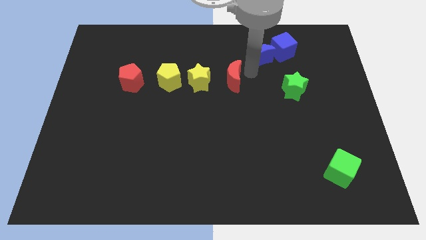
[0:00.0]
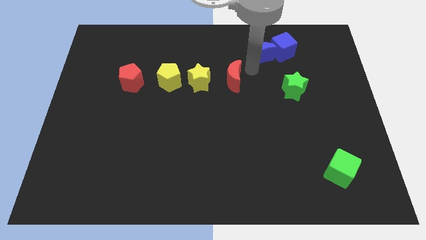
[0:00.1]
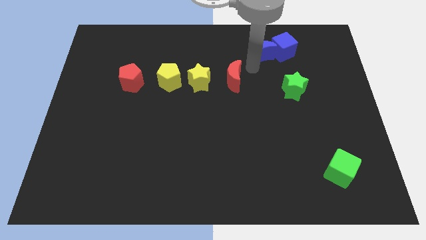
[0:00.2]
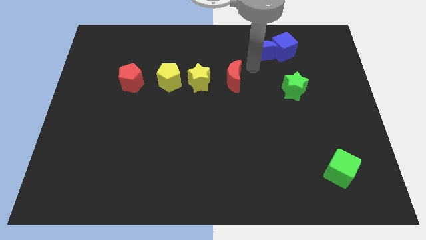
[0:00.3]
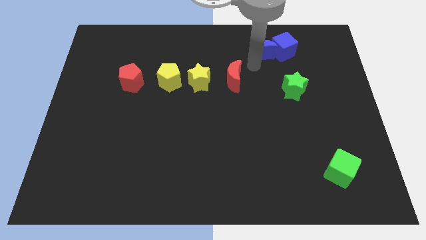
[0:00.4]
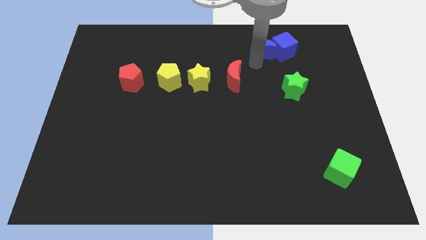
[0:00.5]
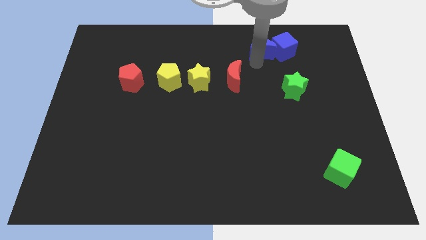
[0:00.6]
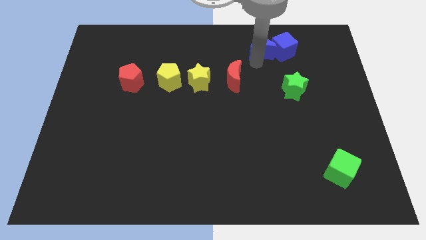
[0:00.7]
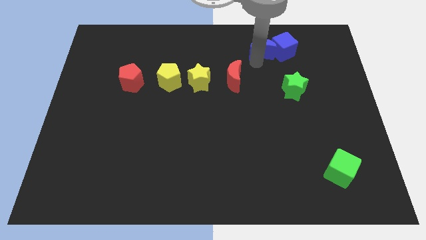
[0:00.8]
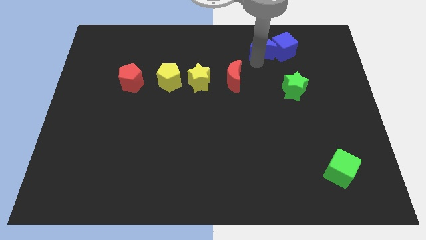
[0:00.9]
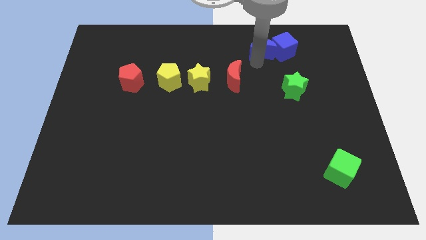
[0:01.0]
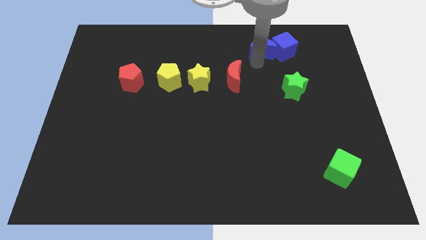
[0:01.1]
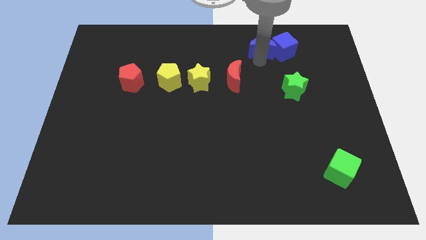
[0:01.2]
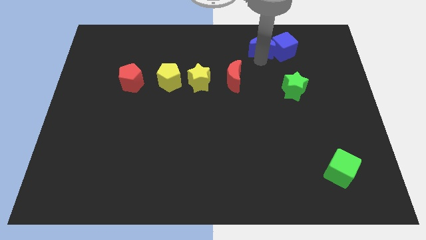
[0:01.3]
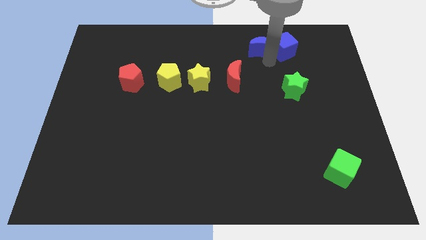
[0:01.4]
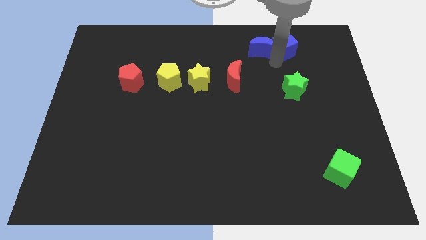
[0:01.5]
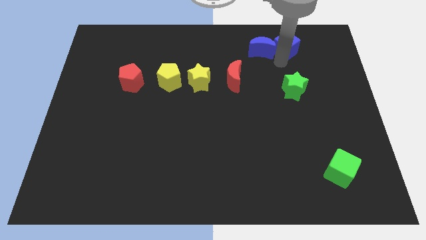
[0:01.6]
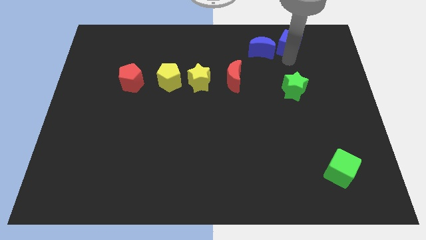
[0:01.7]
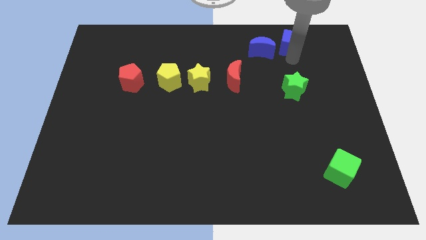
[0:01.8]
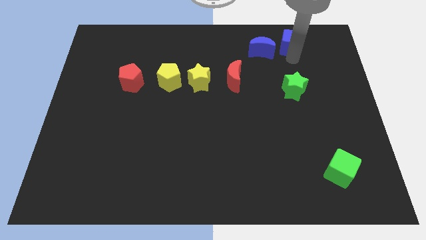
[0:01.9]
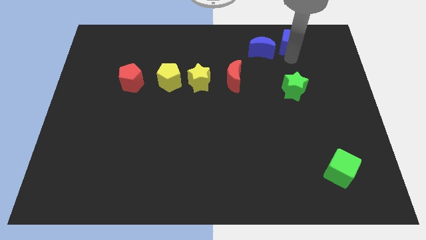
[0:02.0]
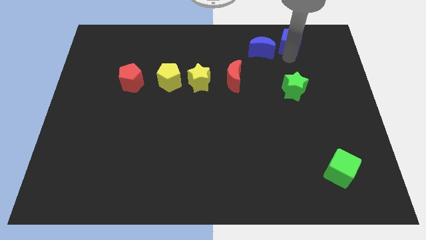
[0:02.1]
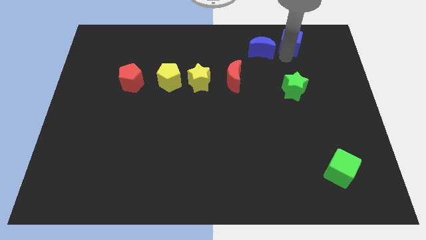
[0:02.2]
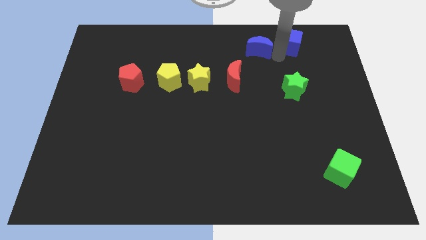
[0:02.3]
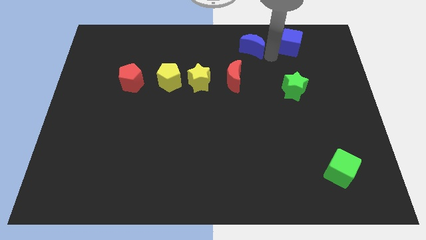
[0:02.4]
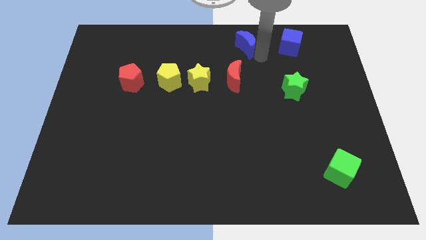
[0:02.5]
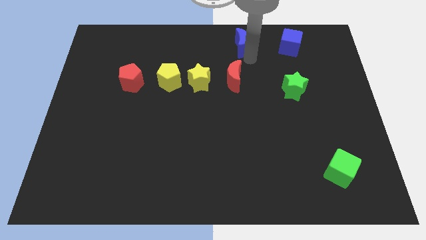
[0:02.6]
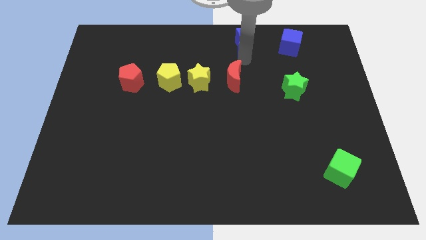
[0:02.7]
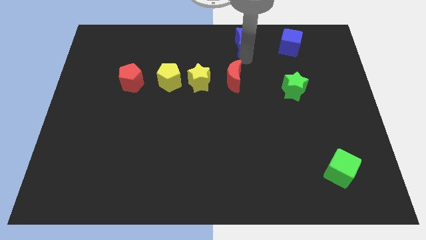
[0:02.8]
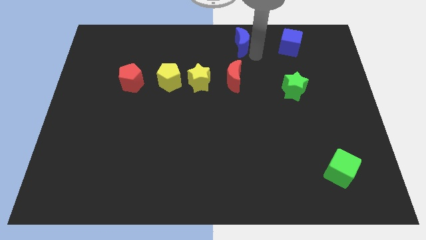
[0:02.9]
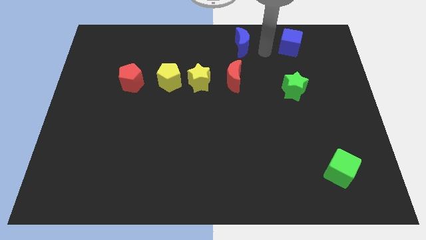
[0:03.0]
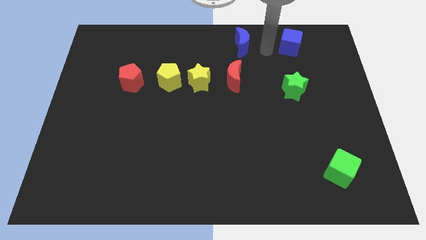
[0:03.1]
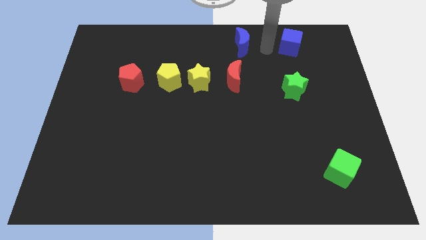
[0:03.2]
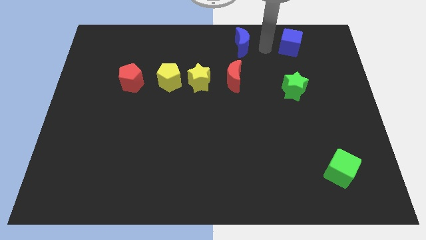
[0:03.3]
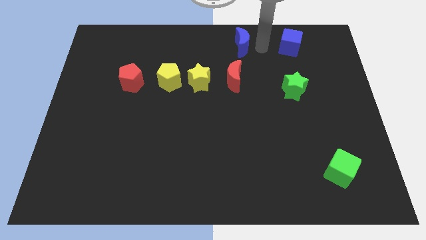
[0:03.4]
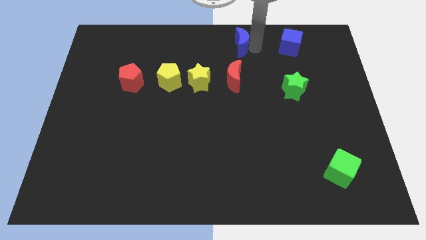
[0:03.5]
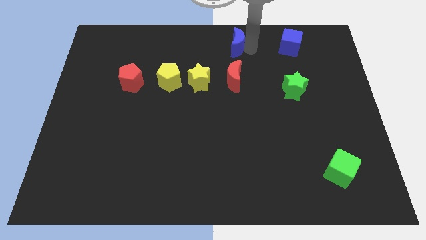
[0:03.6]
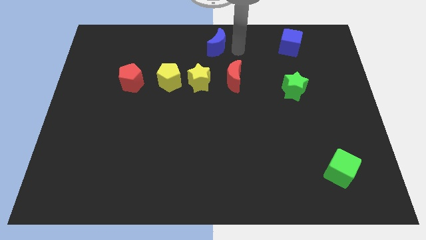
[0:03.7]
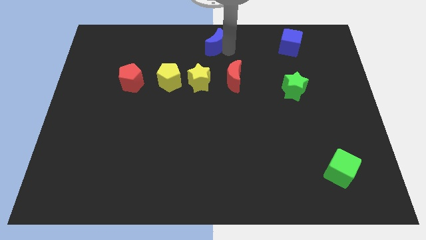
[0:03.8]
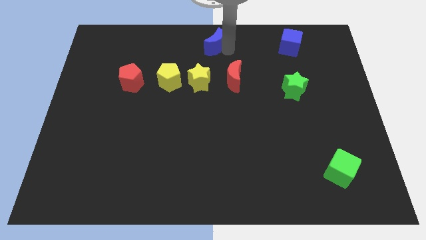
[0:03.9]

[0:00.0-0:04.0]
push the blue crescent to the top center of the board

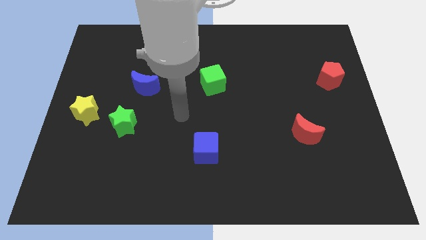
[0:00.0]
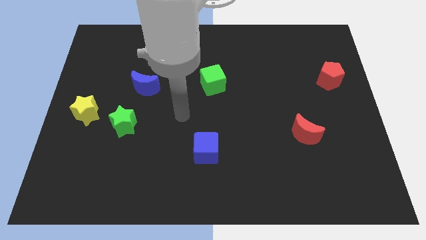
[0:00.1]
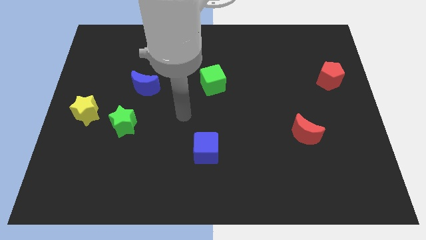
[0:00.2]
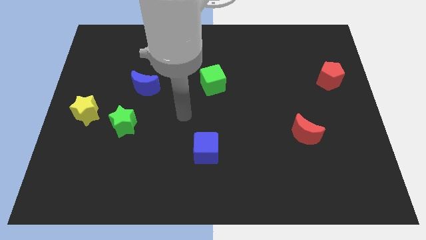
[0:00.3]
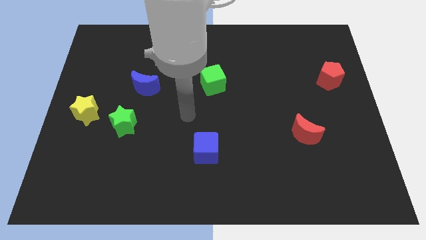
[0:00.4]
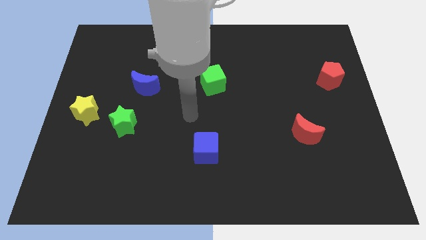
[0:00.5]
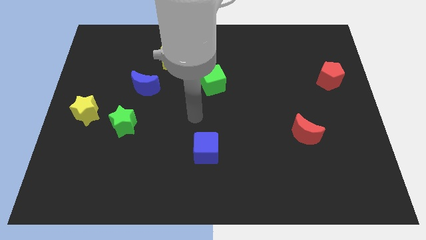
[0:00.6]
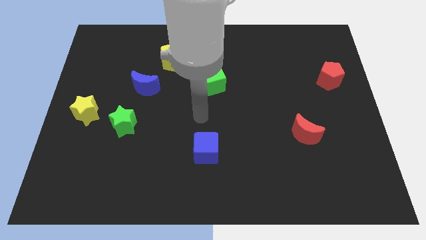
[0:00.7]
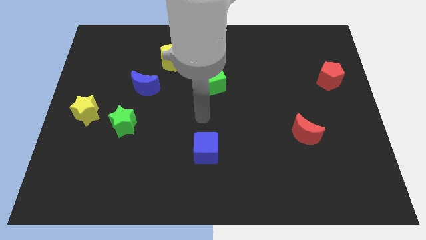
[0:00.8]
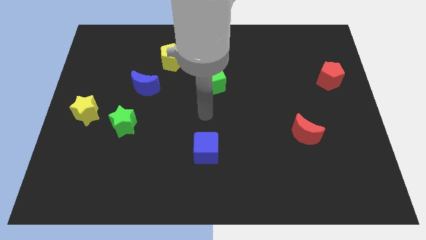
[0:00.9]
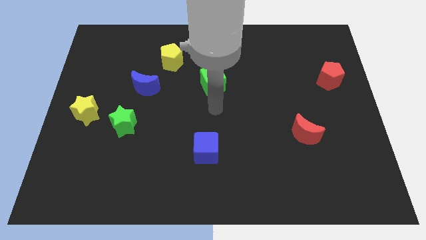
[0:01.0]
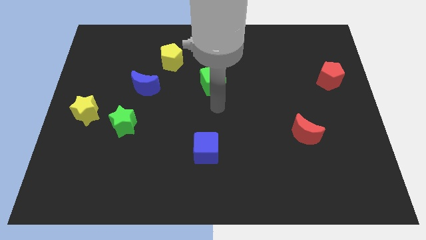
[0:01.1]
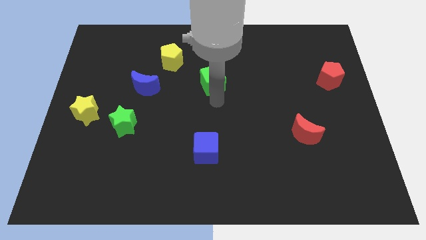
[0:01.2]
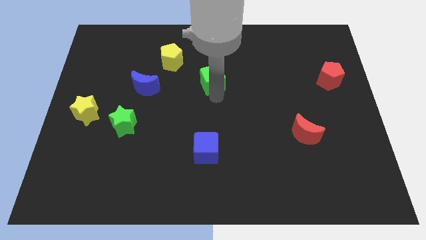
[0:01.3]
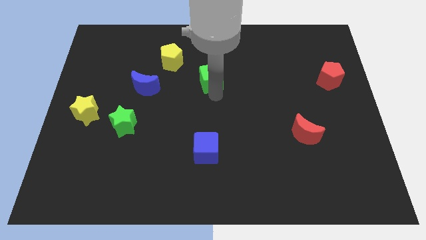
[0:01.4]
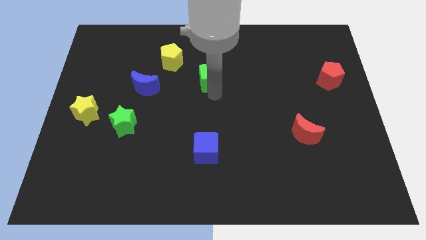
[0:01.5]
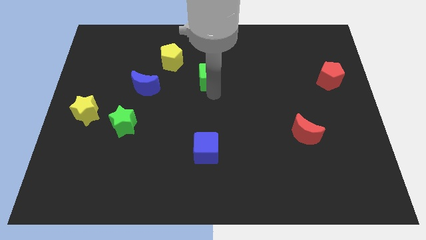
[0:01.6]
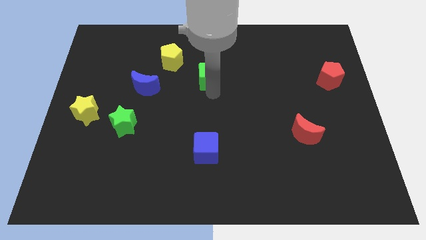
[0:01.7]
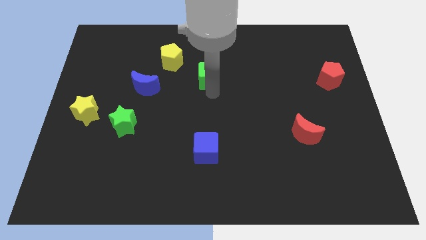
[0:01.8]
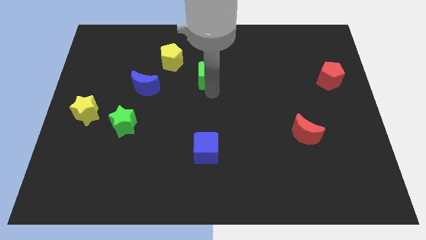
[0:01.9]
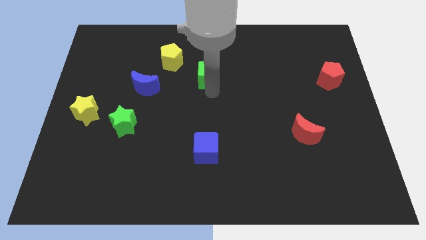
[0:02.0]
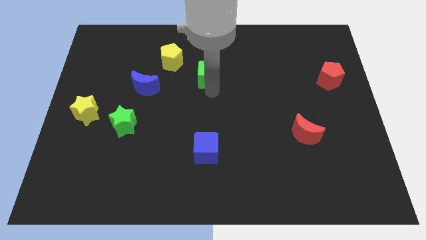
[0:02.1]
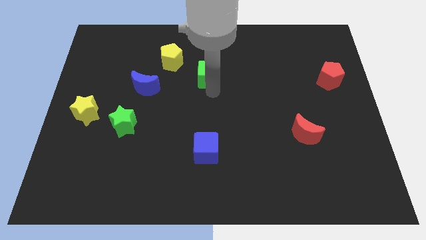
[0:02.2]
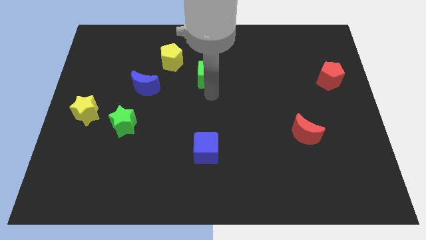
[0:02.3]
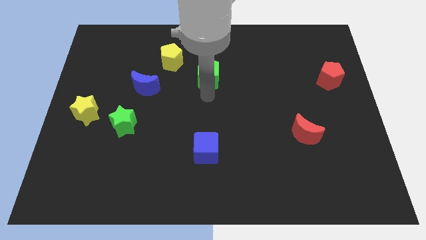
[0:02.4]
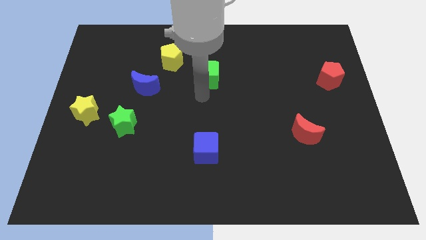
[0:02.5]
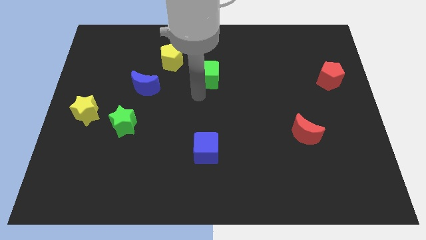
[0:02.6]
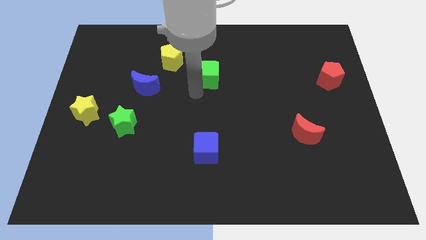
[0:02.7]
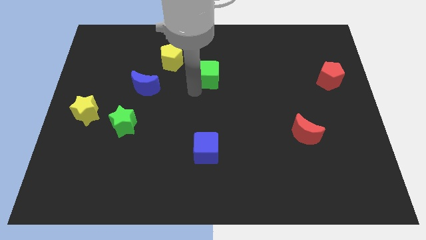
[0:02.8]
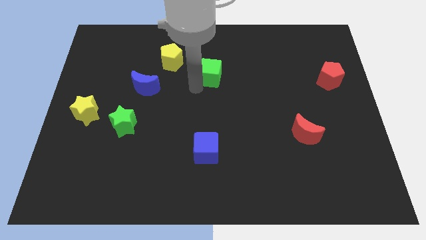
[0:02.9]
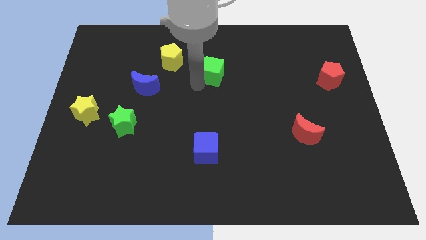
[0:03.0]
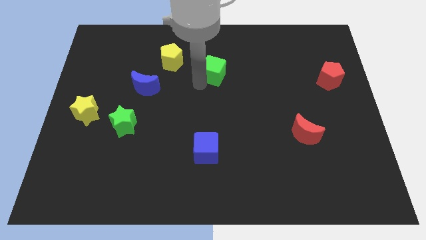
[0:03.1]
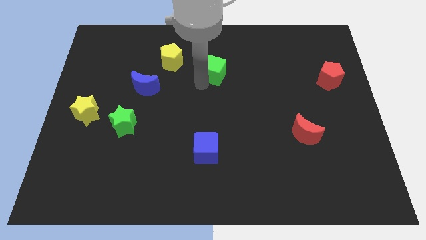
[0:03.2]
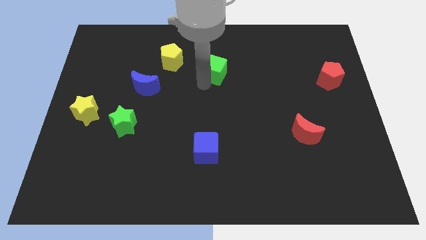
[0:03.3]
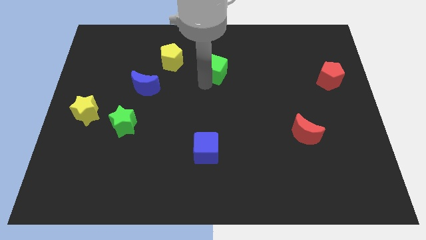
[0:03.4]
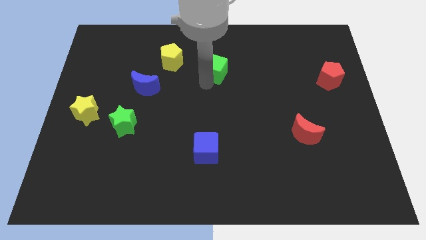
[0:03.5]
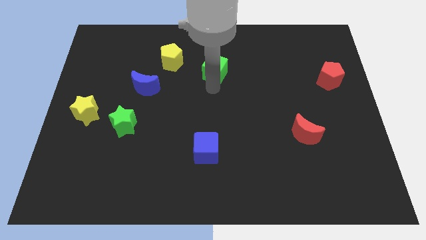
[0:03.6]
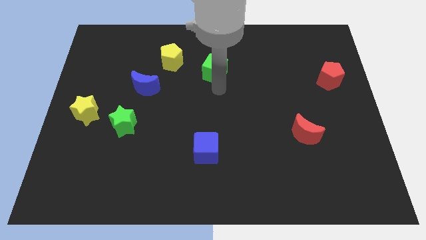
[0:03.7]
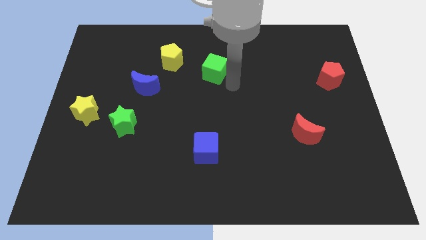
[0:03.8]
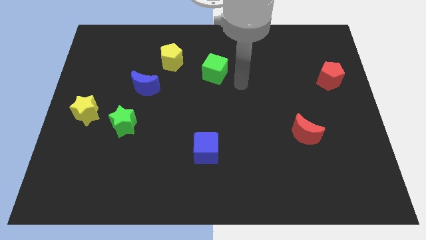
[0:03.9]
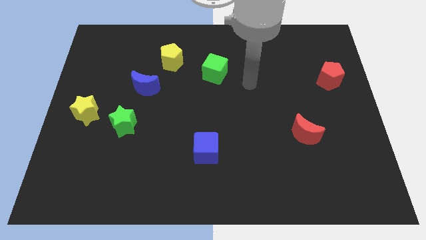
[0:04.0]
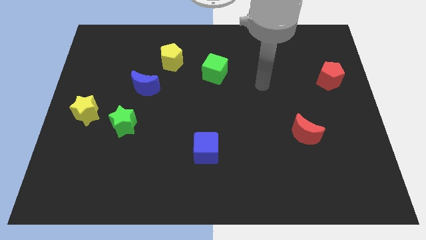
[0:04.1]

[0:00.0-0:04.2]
place green cube horizontal to red pentagon

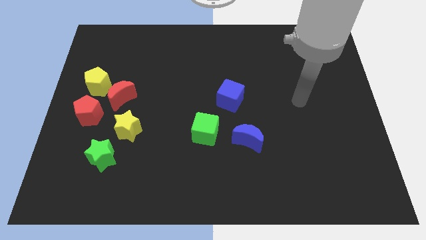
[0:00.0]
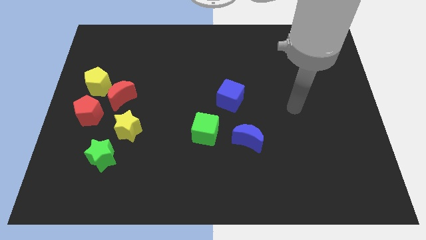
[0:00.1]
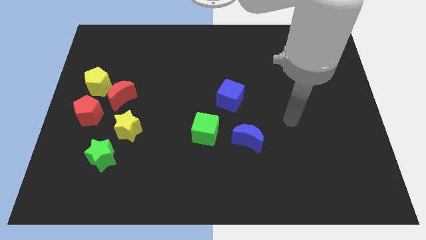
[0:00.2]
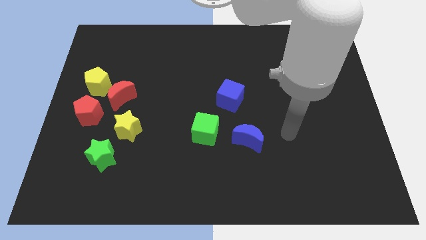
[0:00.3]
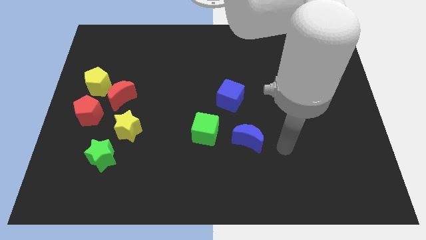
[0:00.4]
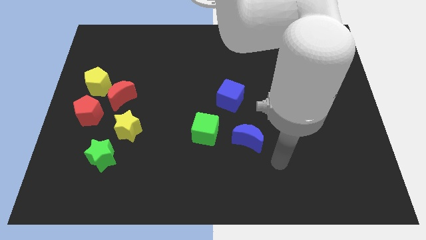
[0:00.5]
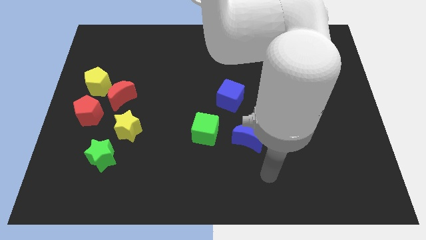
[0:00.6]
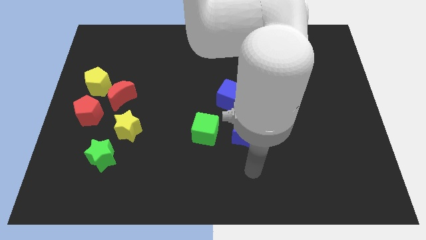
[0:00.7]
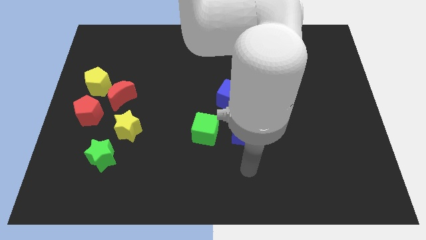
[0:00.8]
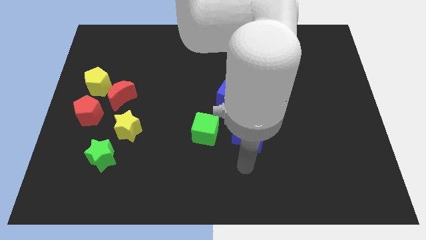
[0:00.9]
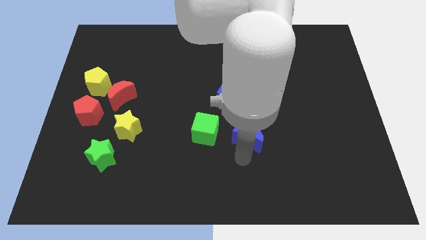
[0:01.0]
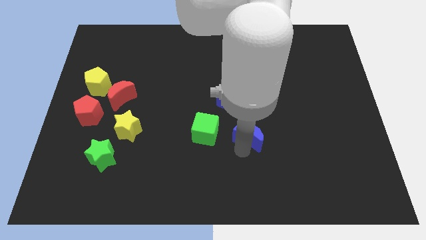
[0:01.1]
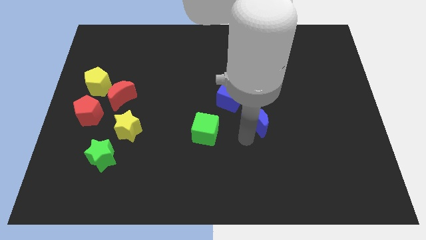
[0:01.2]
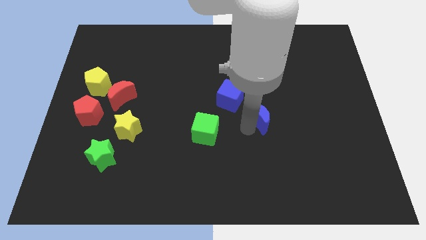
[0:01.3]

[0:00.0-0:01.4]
move the blue crescent to the top of the board
